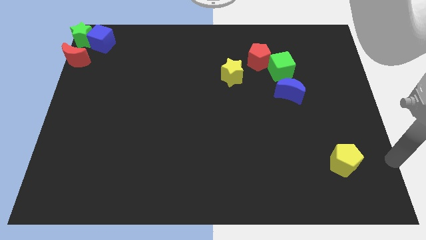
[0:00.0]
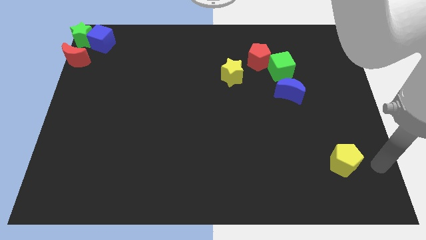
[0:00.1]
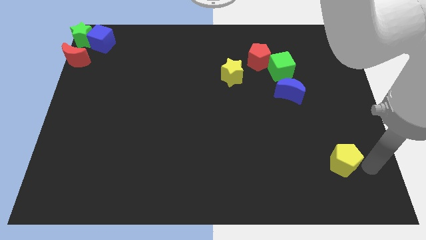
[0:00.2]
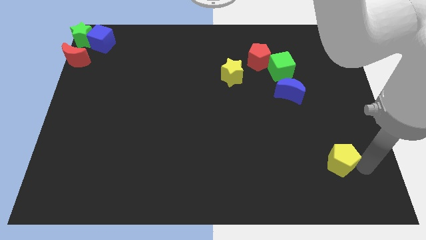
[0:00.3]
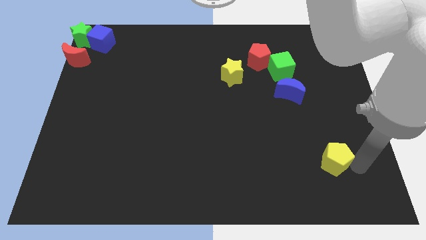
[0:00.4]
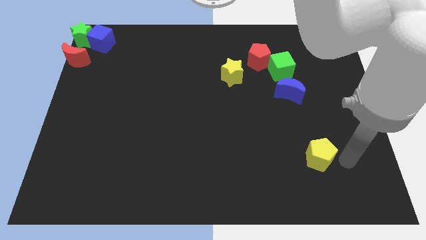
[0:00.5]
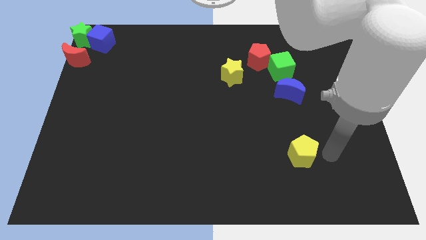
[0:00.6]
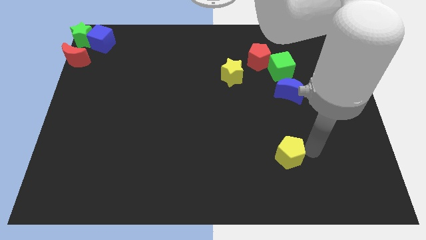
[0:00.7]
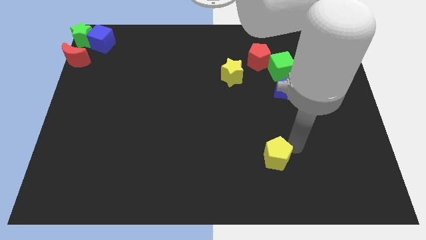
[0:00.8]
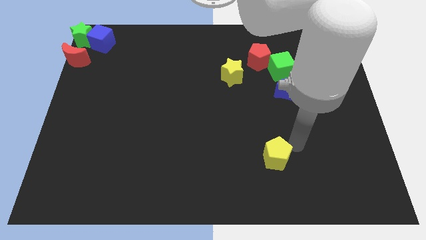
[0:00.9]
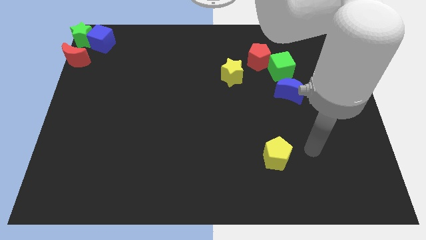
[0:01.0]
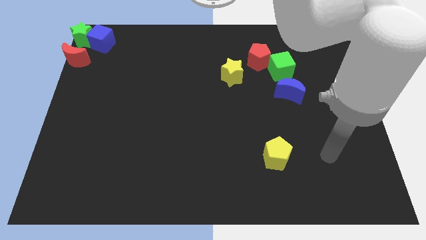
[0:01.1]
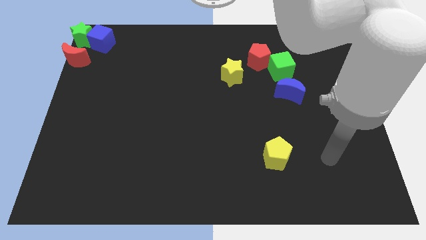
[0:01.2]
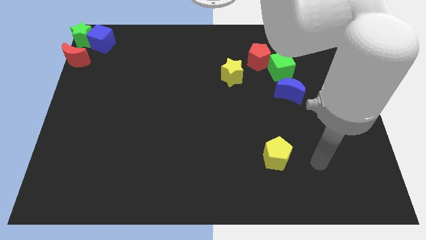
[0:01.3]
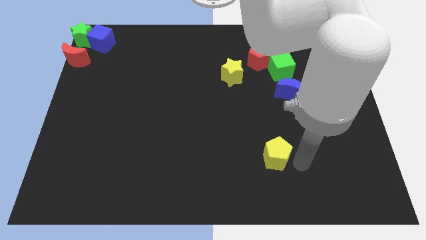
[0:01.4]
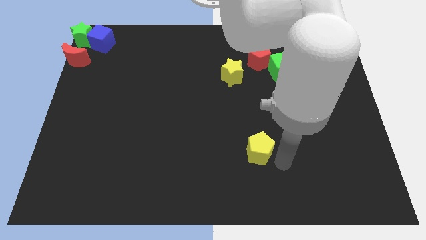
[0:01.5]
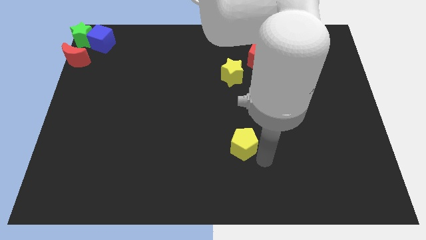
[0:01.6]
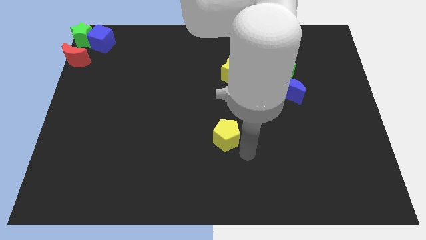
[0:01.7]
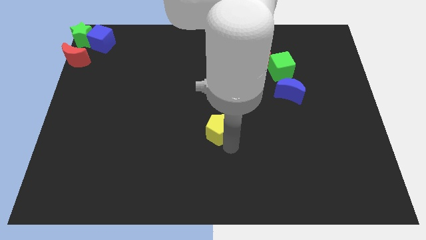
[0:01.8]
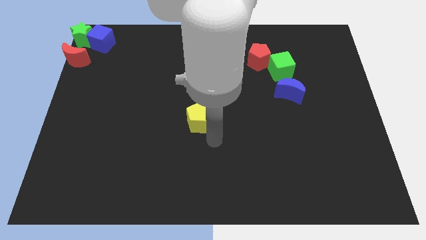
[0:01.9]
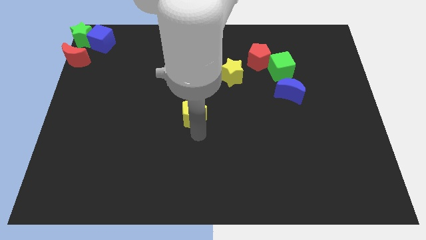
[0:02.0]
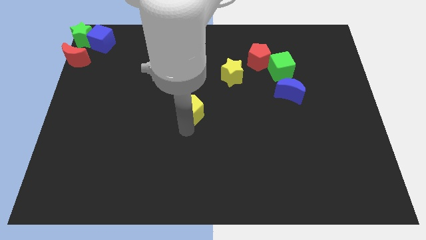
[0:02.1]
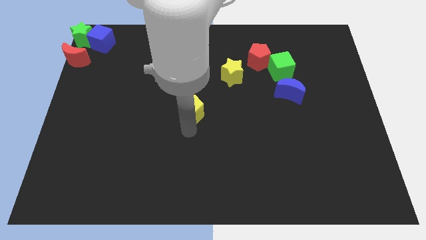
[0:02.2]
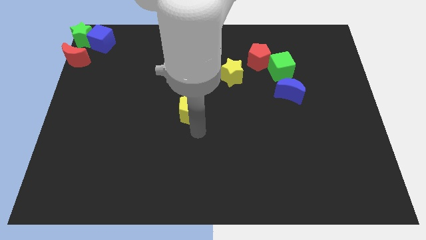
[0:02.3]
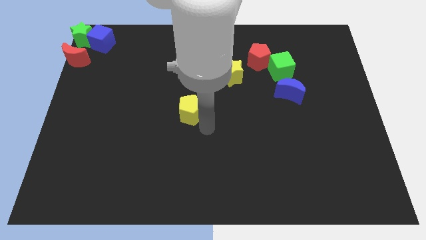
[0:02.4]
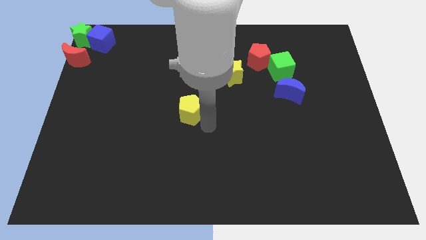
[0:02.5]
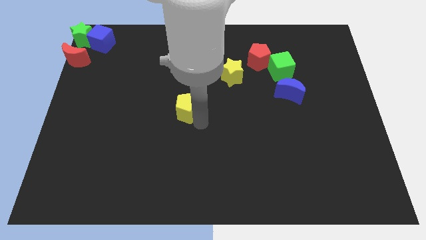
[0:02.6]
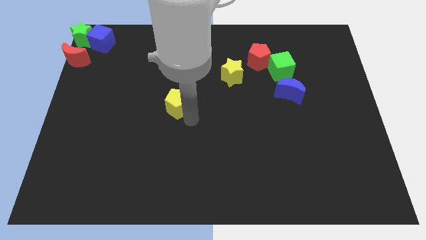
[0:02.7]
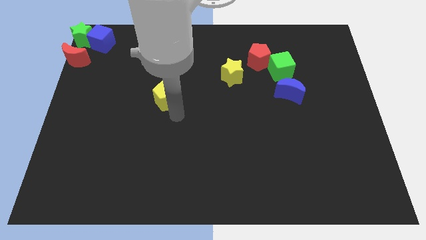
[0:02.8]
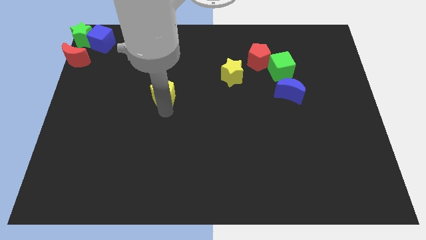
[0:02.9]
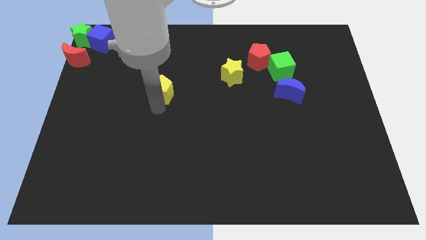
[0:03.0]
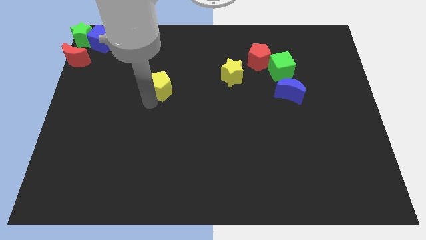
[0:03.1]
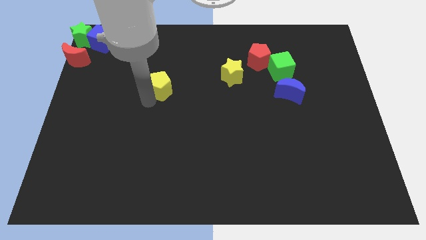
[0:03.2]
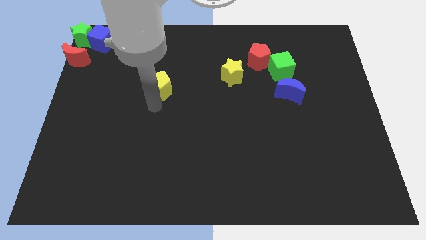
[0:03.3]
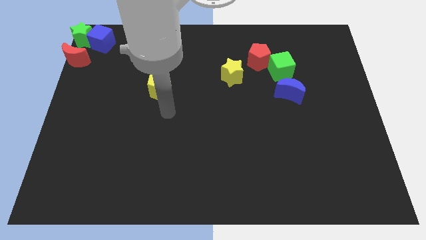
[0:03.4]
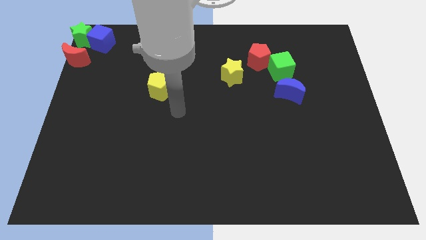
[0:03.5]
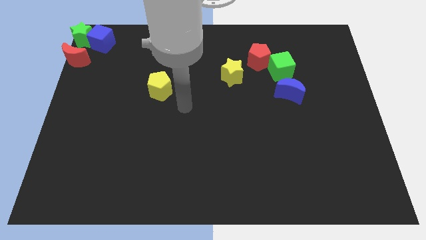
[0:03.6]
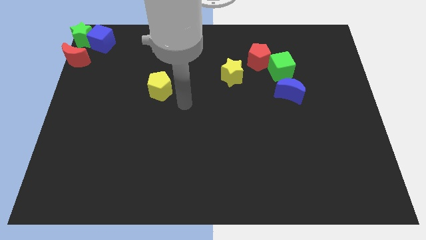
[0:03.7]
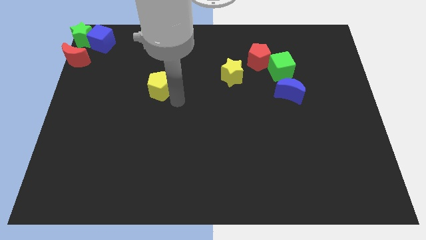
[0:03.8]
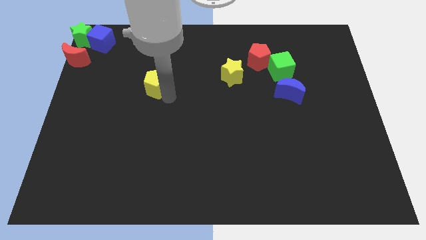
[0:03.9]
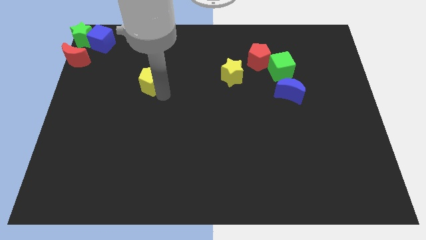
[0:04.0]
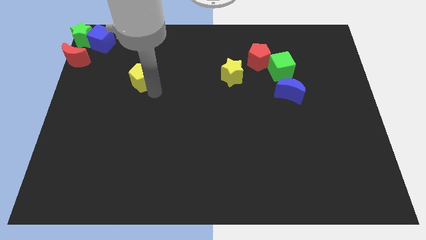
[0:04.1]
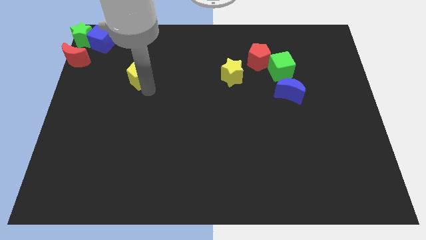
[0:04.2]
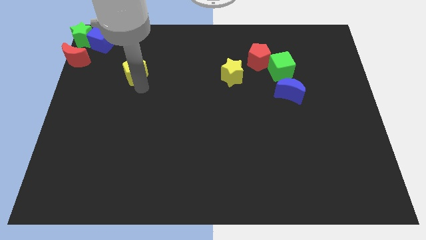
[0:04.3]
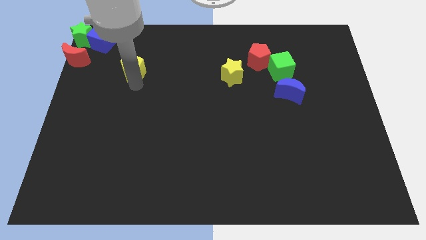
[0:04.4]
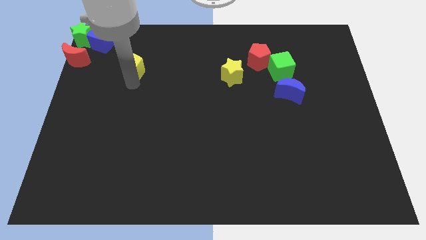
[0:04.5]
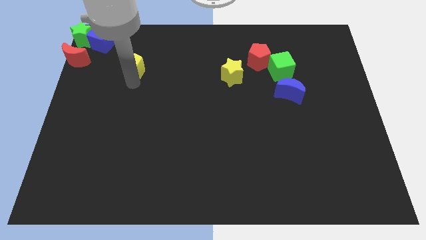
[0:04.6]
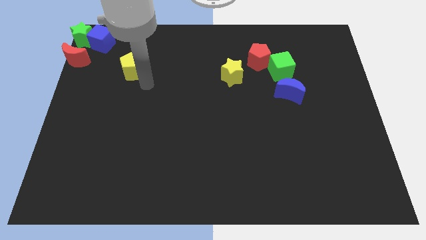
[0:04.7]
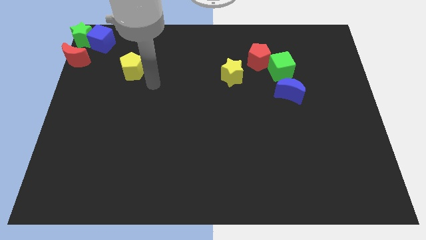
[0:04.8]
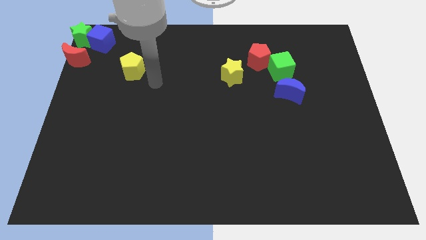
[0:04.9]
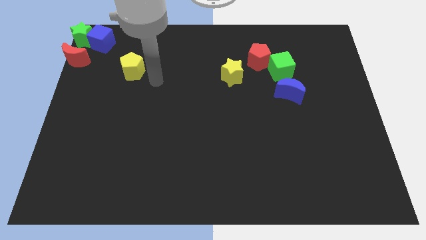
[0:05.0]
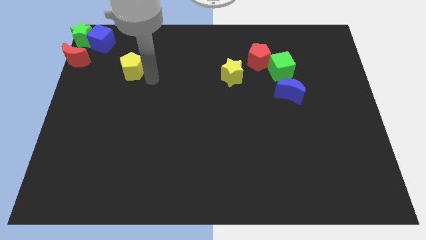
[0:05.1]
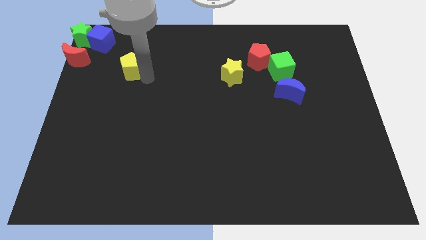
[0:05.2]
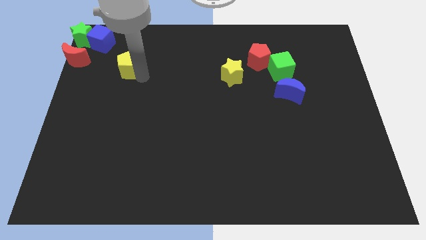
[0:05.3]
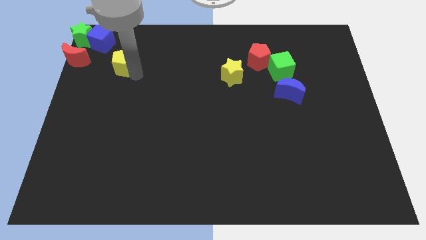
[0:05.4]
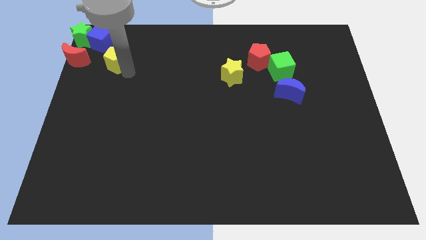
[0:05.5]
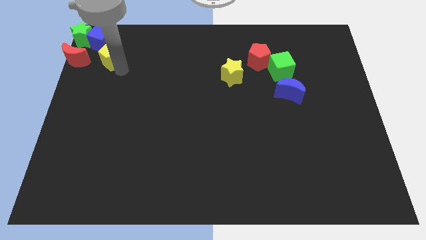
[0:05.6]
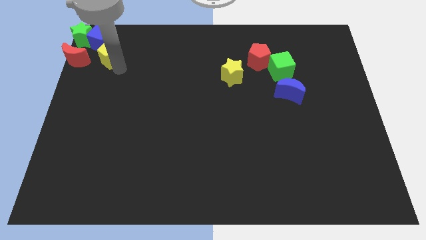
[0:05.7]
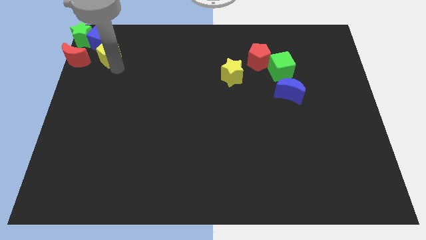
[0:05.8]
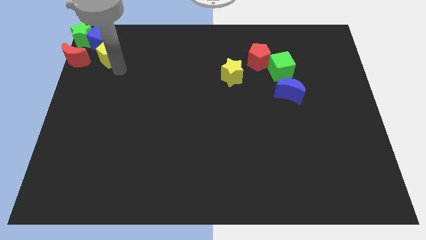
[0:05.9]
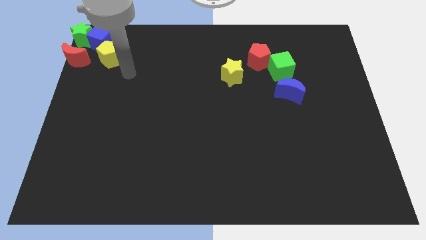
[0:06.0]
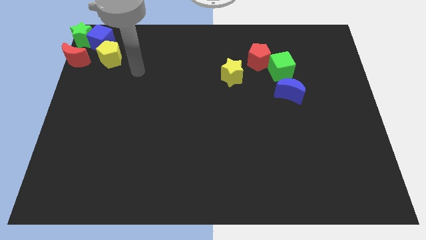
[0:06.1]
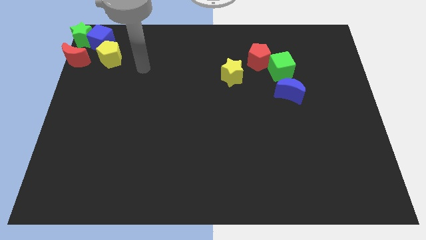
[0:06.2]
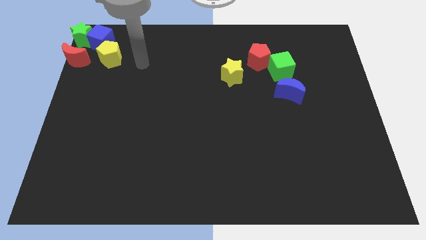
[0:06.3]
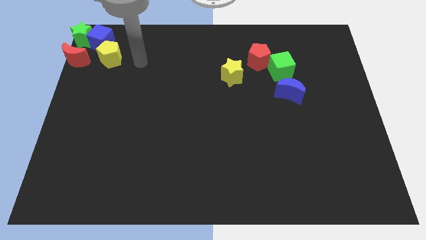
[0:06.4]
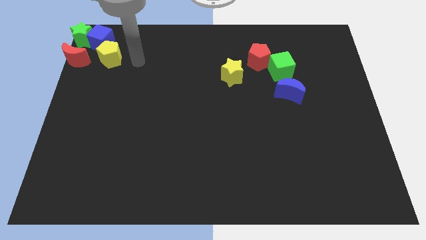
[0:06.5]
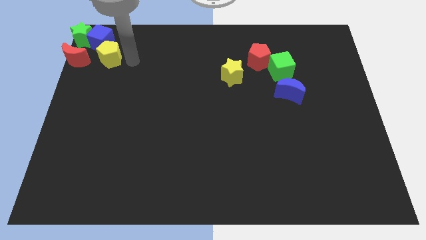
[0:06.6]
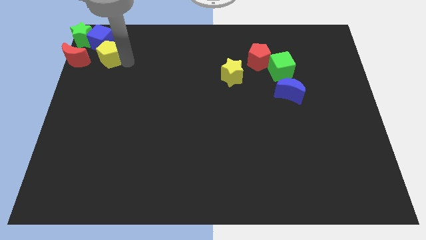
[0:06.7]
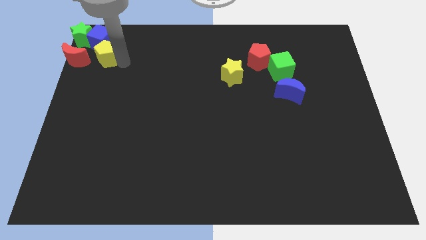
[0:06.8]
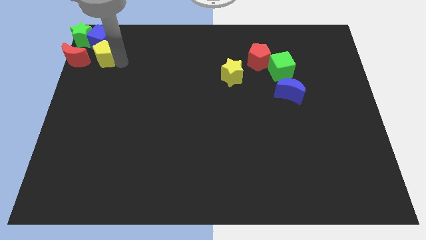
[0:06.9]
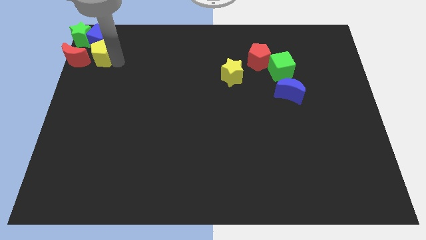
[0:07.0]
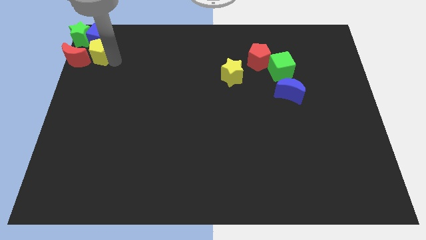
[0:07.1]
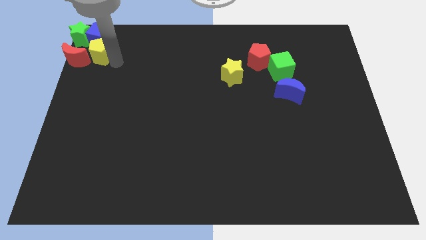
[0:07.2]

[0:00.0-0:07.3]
place the yellow pentagon on the right of the red crescent

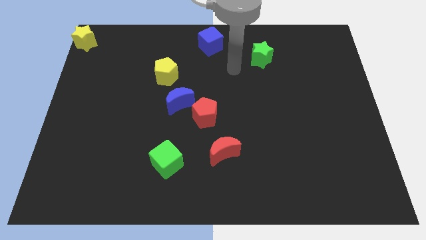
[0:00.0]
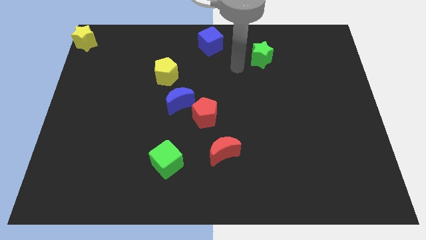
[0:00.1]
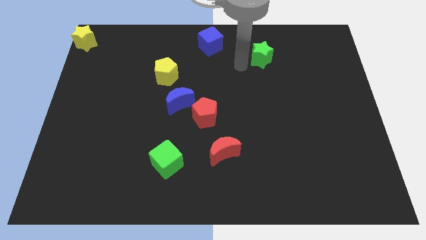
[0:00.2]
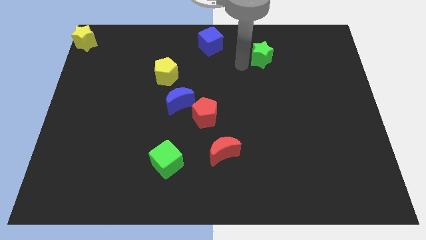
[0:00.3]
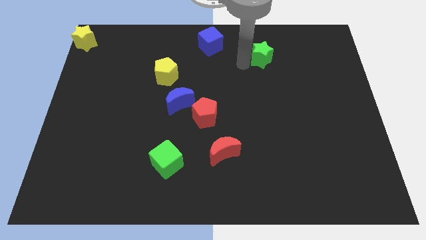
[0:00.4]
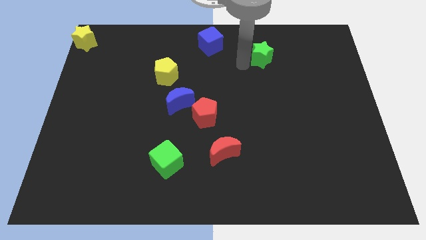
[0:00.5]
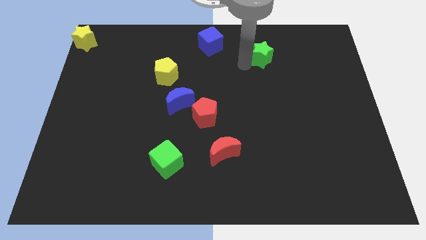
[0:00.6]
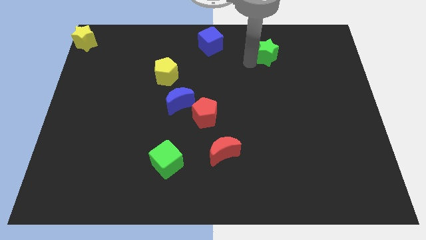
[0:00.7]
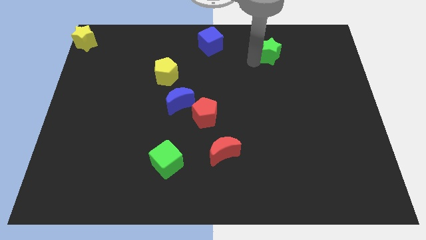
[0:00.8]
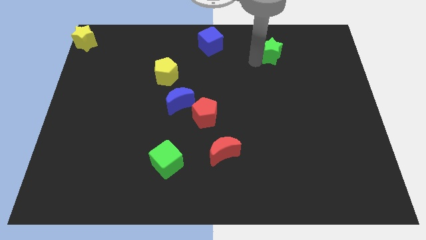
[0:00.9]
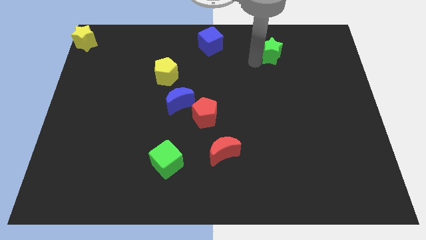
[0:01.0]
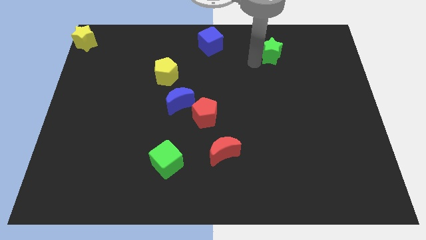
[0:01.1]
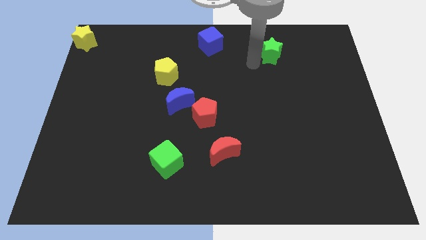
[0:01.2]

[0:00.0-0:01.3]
push the green star towards the top right
